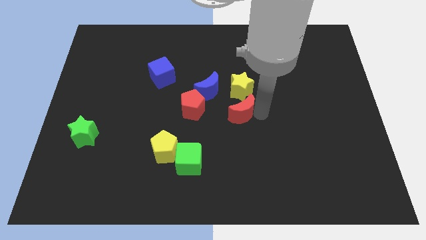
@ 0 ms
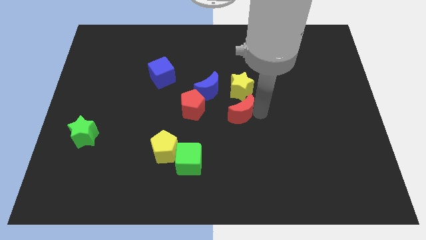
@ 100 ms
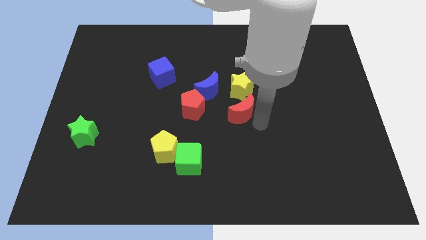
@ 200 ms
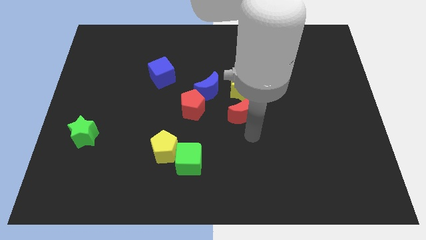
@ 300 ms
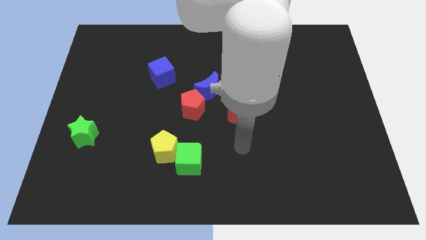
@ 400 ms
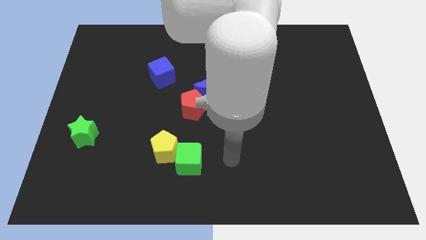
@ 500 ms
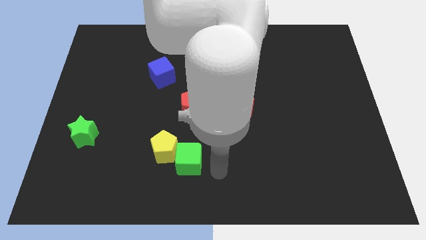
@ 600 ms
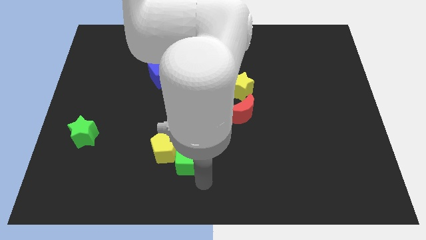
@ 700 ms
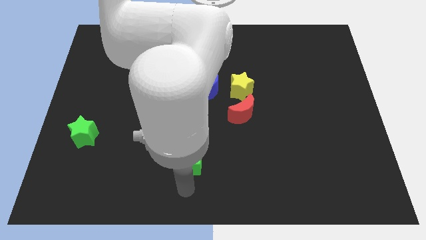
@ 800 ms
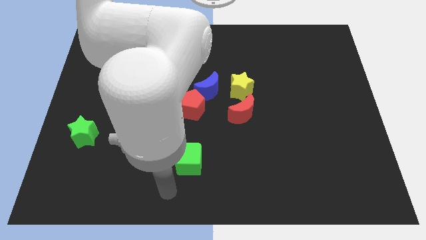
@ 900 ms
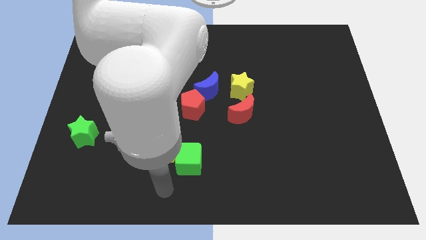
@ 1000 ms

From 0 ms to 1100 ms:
move your arm away from red moon

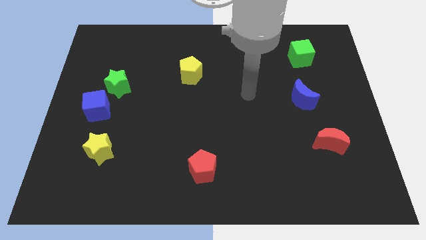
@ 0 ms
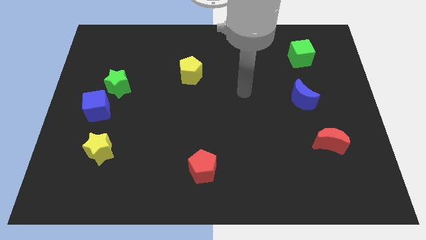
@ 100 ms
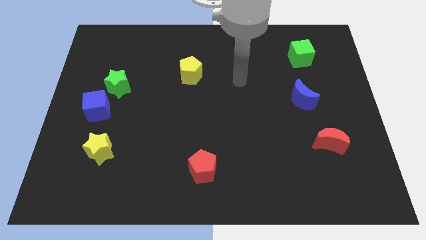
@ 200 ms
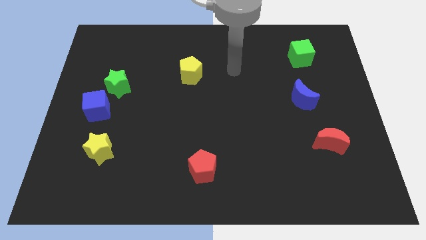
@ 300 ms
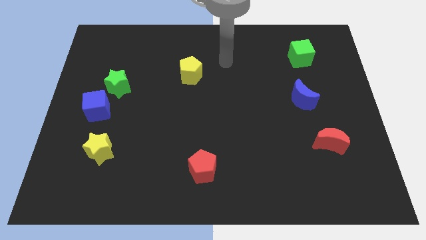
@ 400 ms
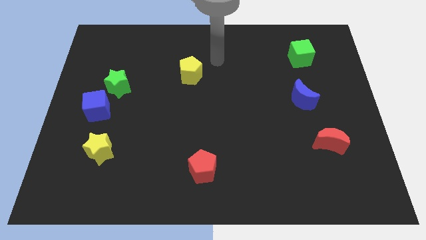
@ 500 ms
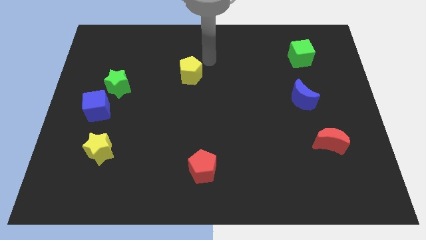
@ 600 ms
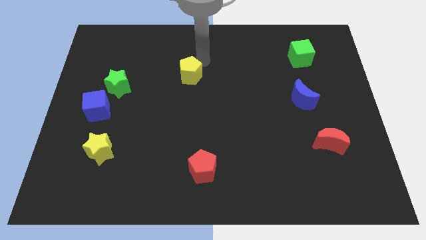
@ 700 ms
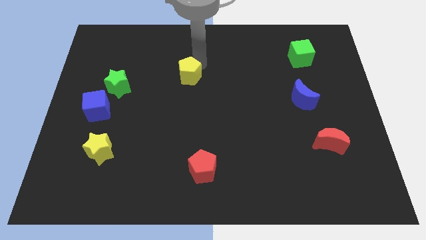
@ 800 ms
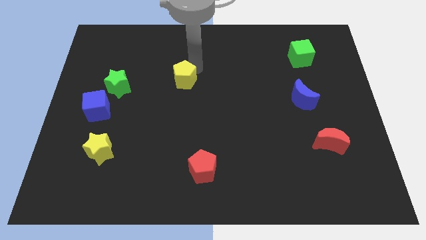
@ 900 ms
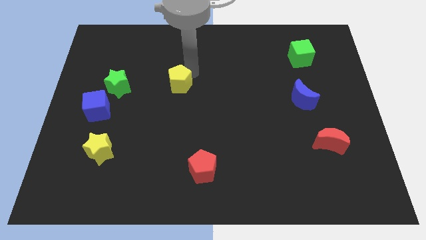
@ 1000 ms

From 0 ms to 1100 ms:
place the yellow pentagon to the right side of the green star

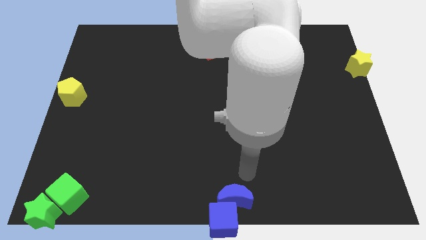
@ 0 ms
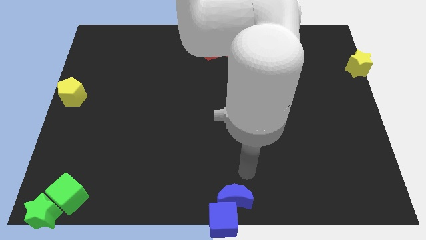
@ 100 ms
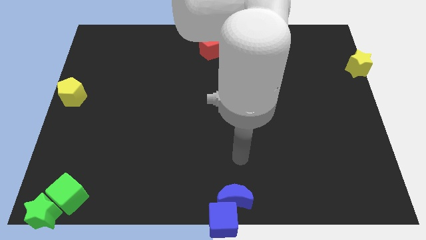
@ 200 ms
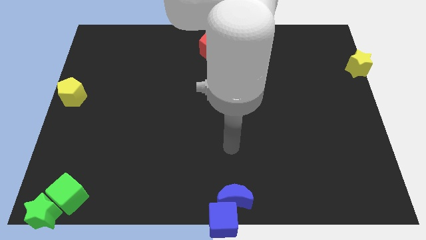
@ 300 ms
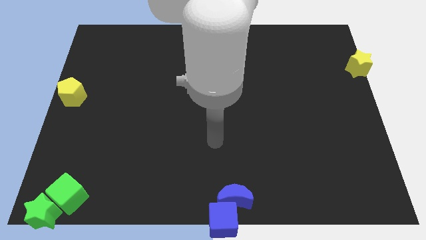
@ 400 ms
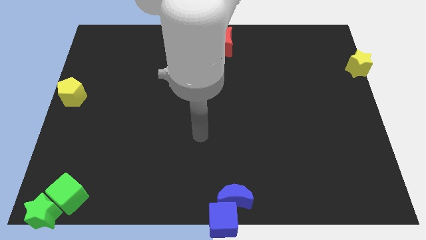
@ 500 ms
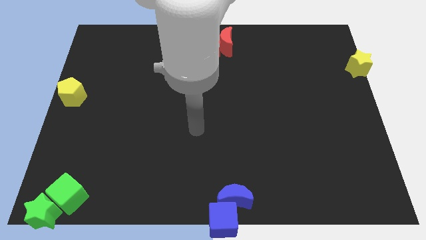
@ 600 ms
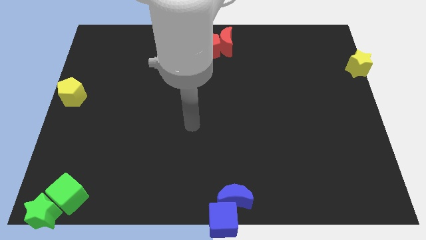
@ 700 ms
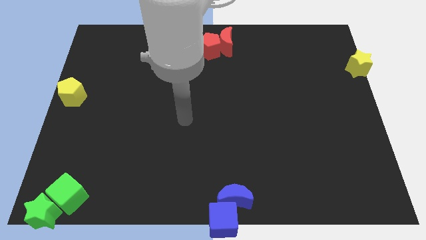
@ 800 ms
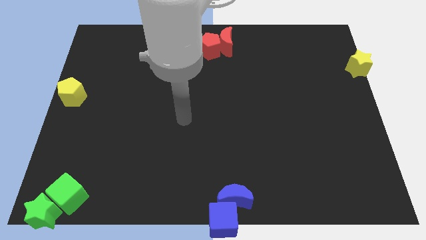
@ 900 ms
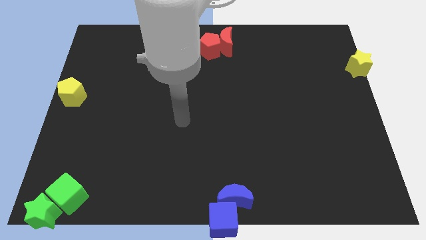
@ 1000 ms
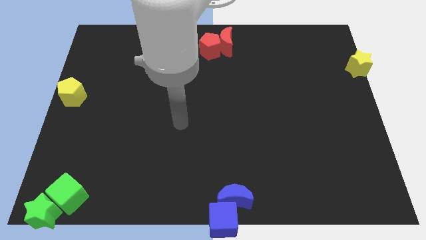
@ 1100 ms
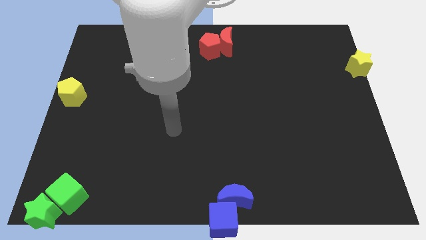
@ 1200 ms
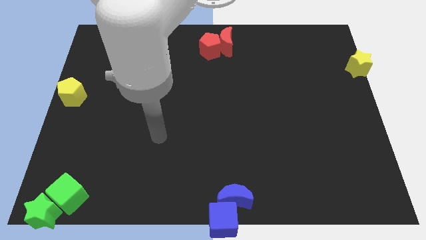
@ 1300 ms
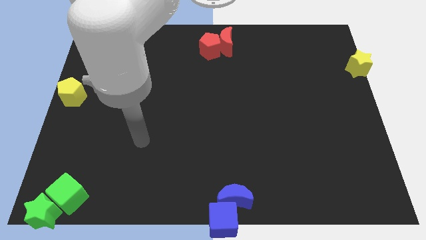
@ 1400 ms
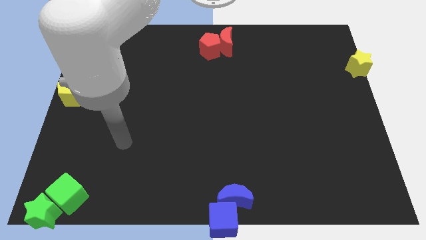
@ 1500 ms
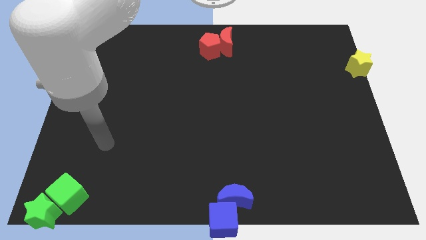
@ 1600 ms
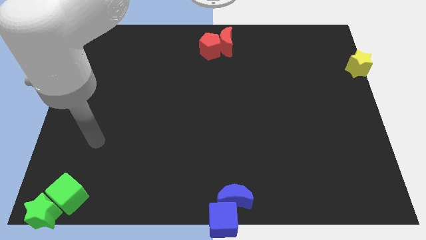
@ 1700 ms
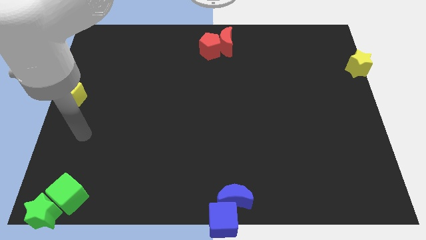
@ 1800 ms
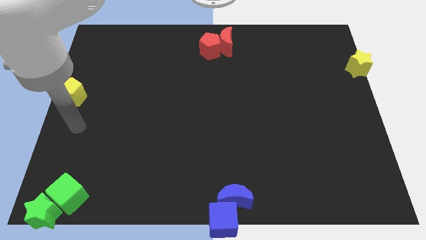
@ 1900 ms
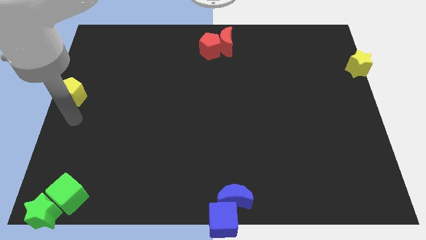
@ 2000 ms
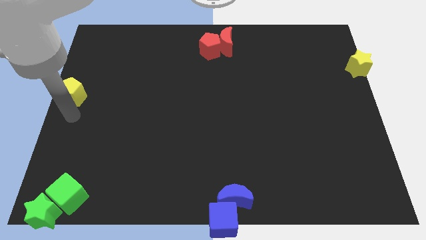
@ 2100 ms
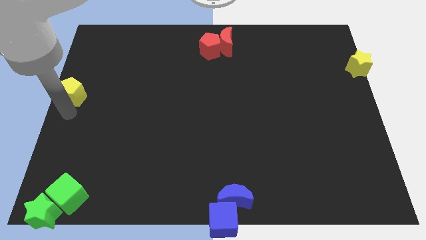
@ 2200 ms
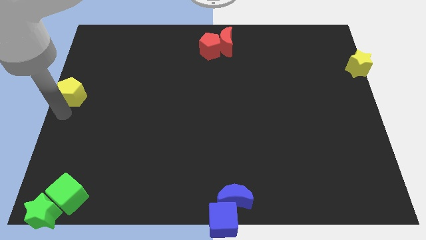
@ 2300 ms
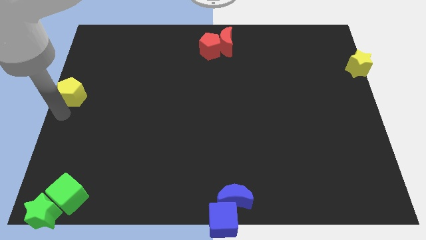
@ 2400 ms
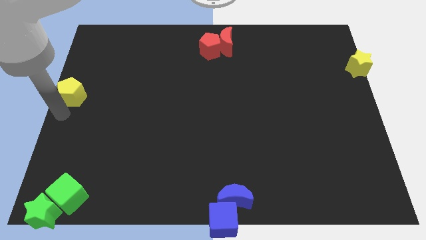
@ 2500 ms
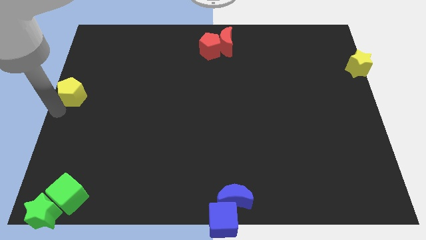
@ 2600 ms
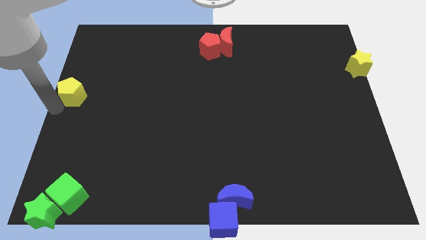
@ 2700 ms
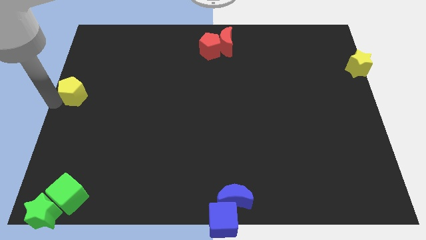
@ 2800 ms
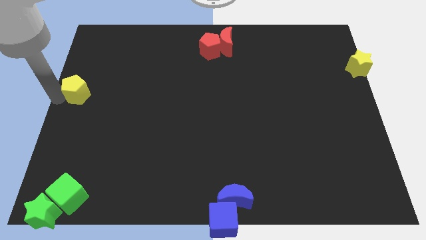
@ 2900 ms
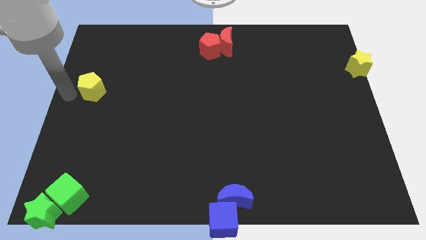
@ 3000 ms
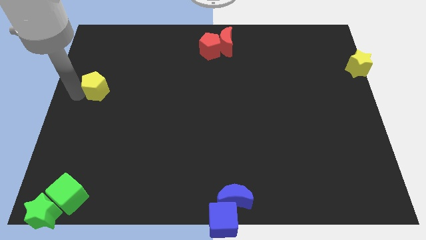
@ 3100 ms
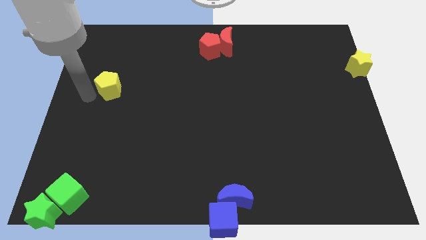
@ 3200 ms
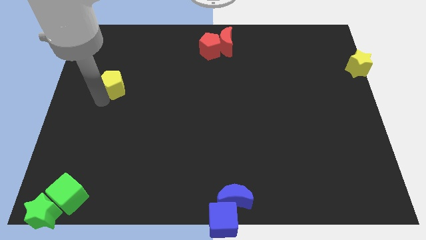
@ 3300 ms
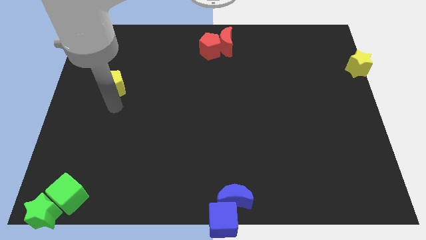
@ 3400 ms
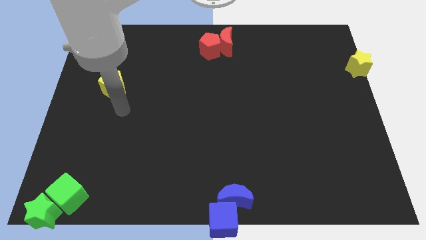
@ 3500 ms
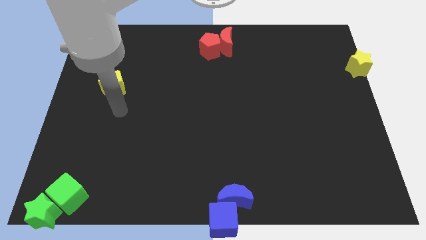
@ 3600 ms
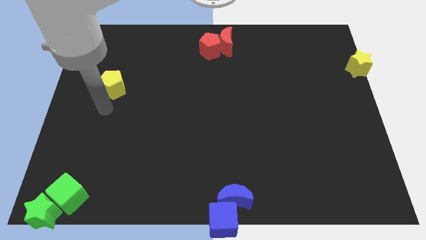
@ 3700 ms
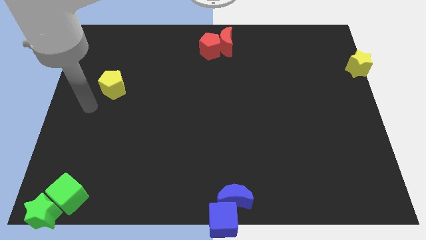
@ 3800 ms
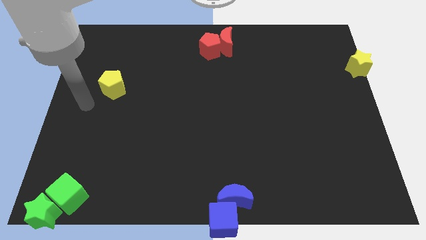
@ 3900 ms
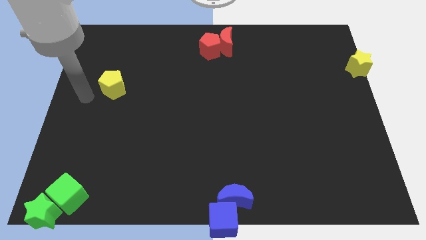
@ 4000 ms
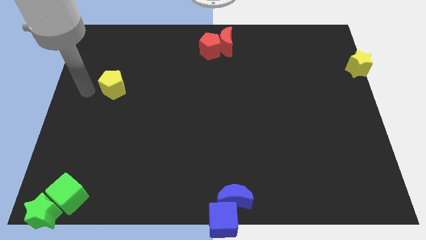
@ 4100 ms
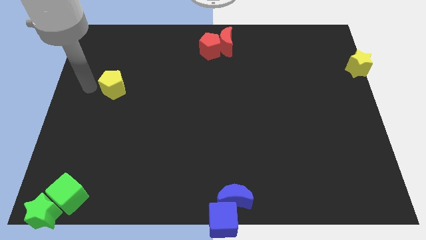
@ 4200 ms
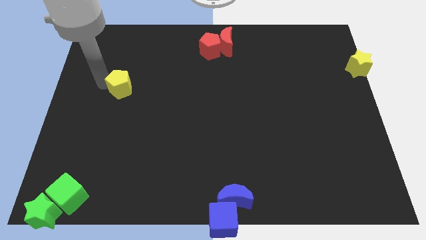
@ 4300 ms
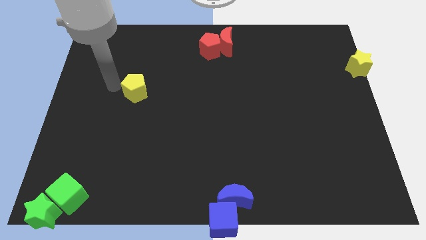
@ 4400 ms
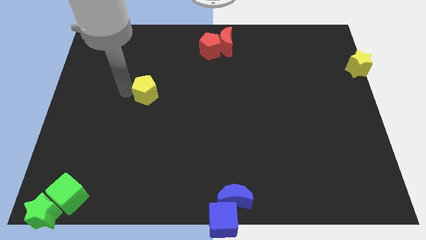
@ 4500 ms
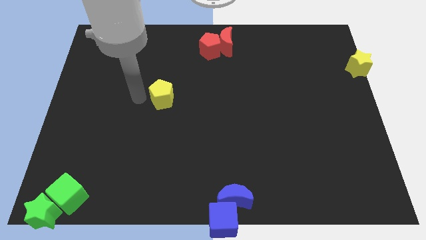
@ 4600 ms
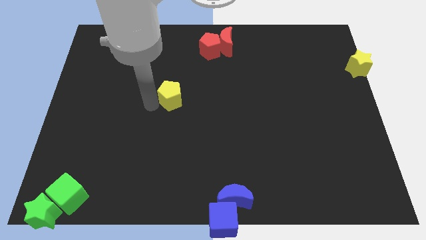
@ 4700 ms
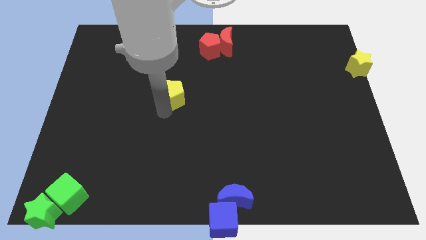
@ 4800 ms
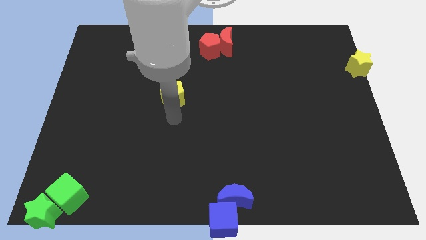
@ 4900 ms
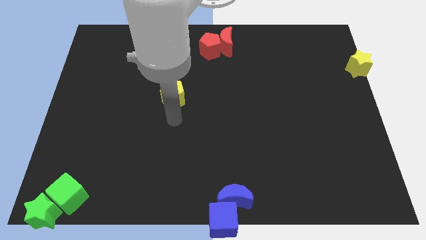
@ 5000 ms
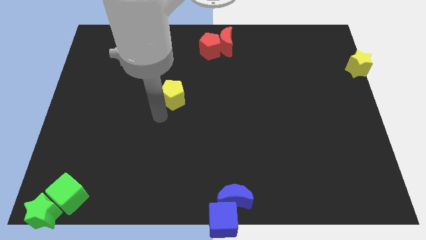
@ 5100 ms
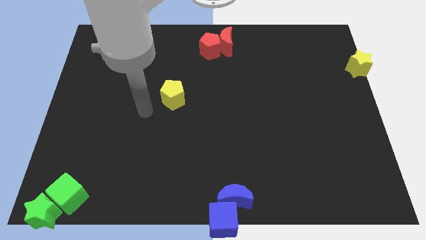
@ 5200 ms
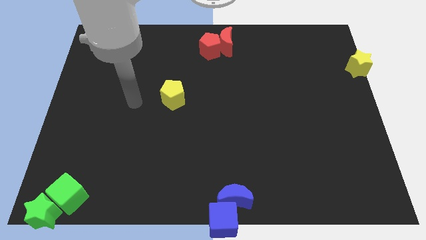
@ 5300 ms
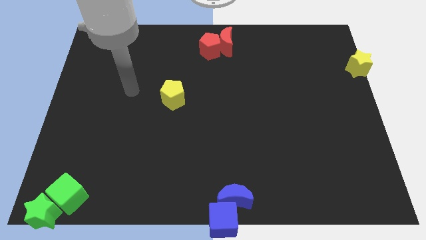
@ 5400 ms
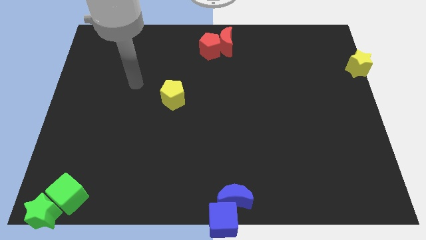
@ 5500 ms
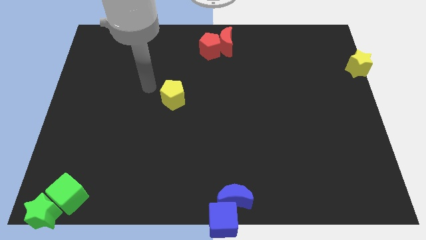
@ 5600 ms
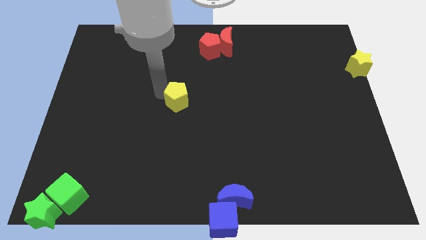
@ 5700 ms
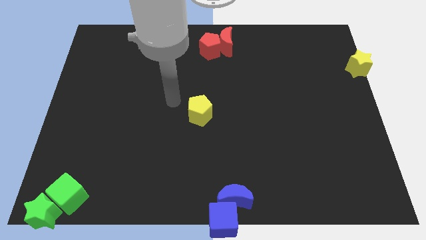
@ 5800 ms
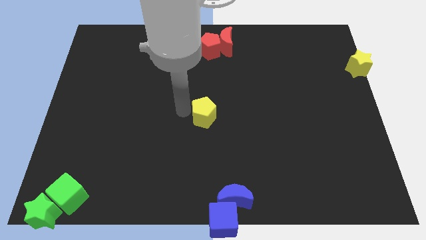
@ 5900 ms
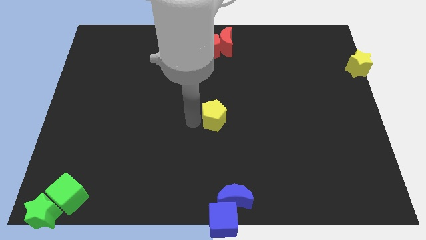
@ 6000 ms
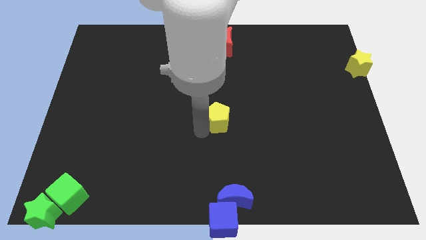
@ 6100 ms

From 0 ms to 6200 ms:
move yellow pentagon to the center of the board

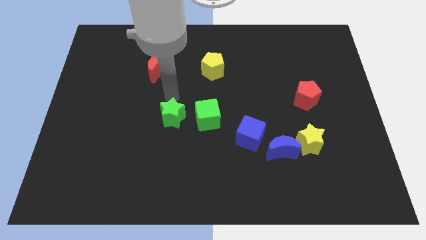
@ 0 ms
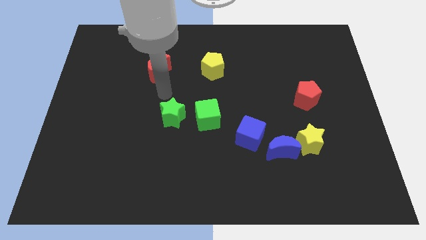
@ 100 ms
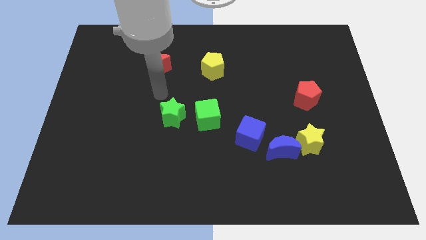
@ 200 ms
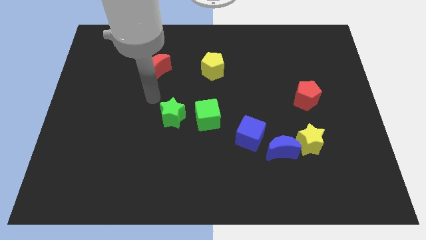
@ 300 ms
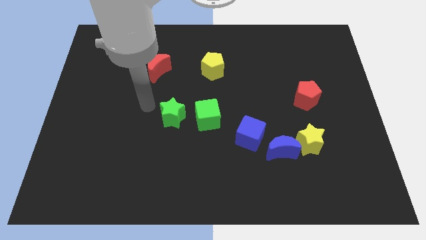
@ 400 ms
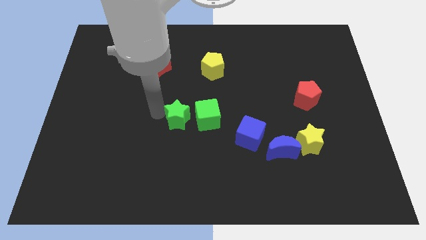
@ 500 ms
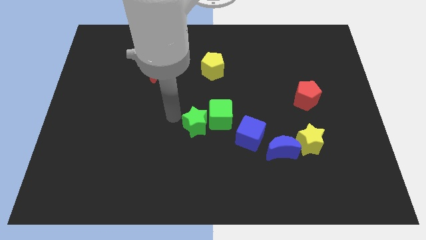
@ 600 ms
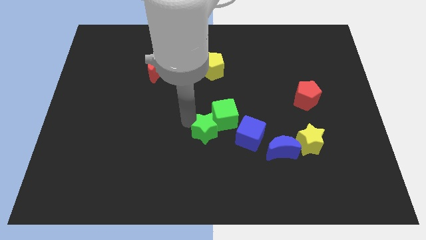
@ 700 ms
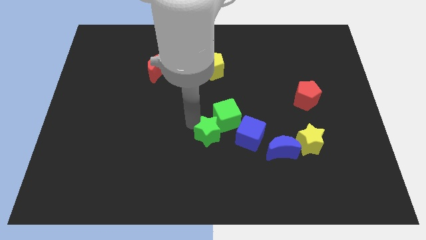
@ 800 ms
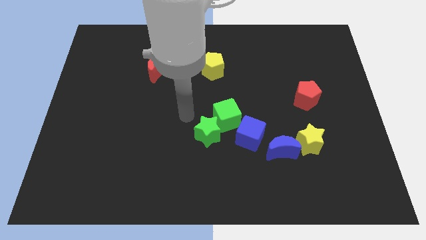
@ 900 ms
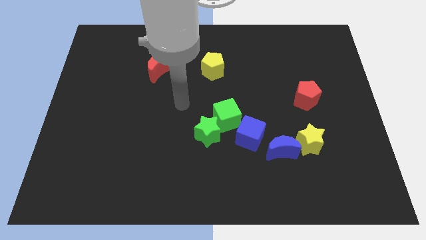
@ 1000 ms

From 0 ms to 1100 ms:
push the green star into the green cube
